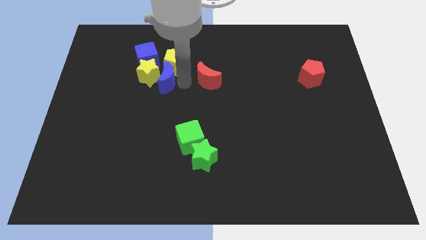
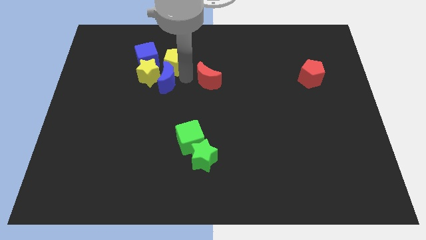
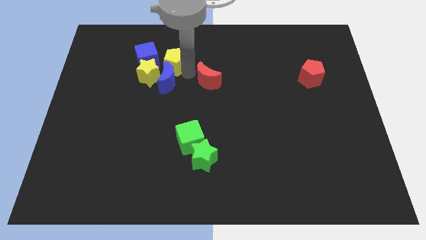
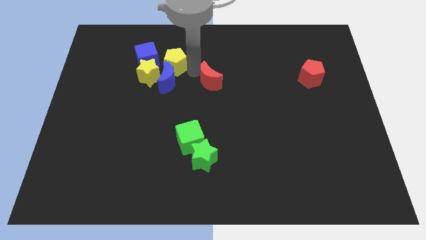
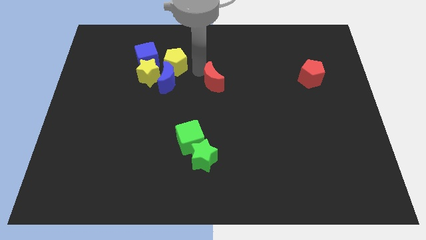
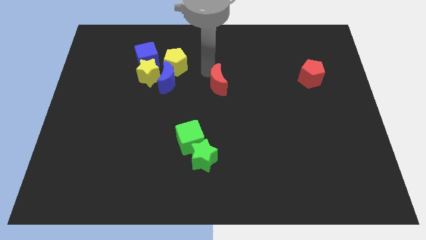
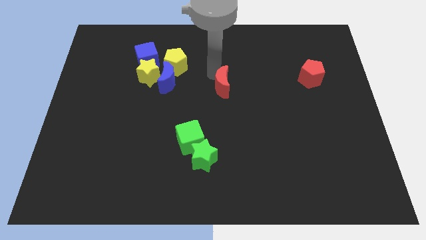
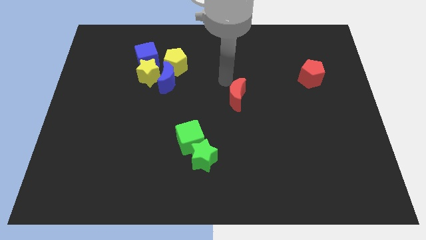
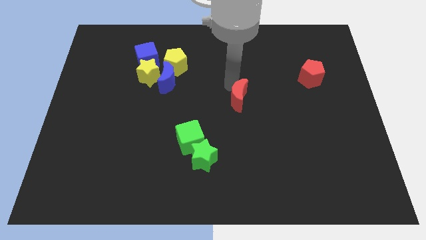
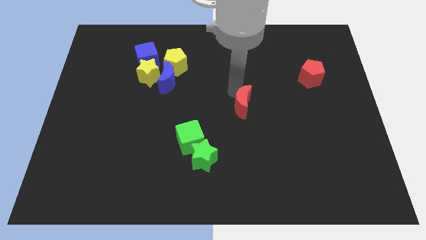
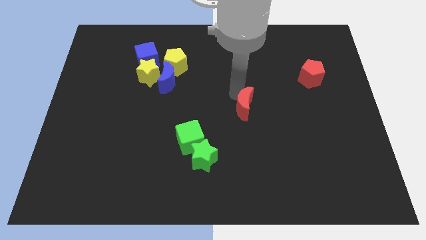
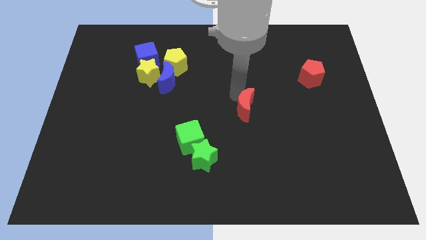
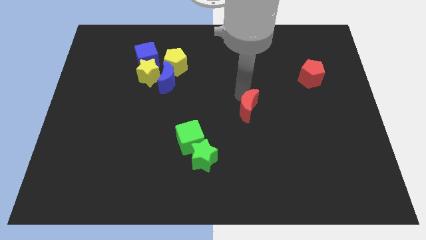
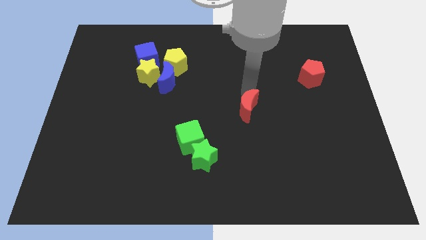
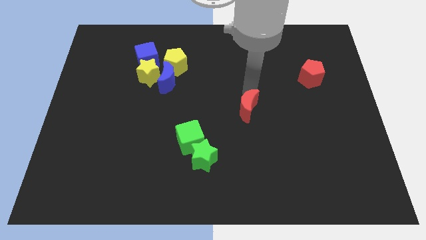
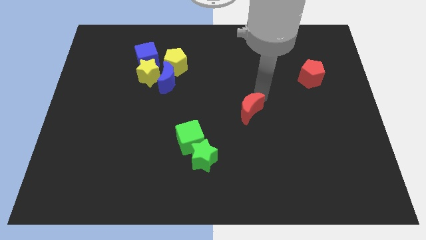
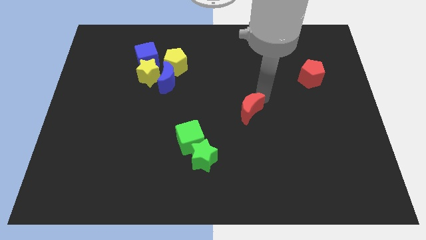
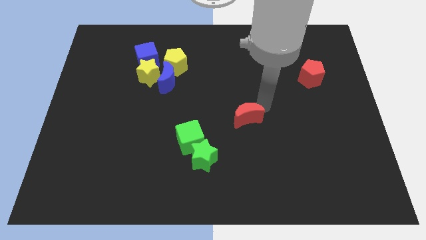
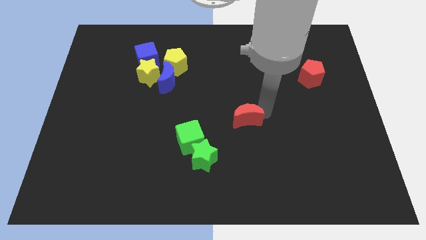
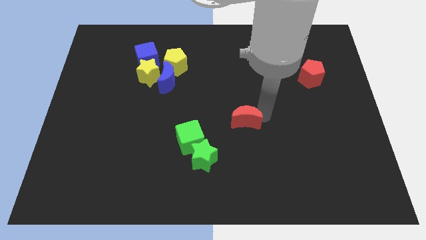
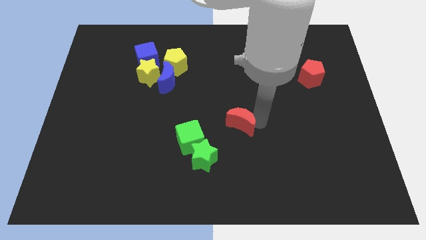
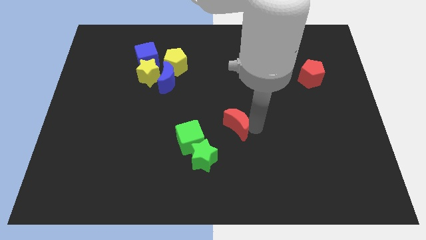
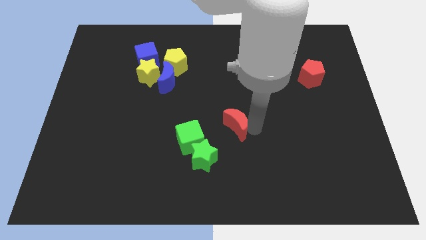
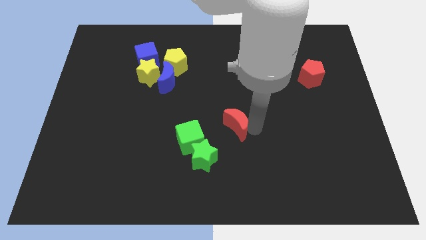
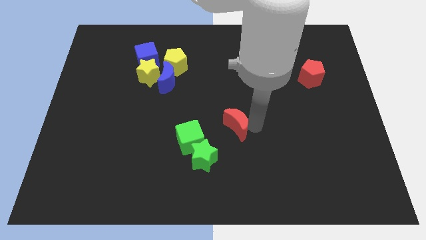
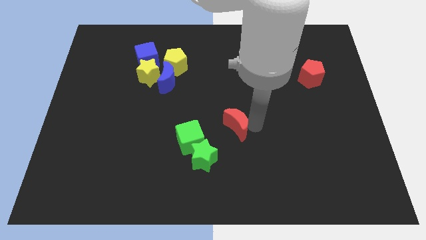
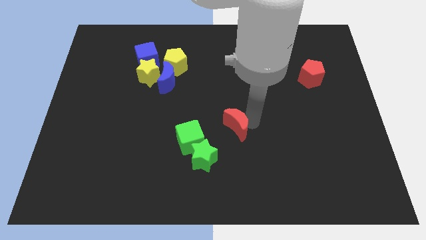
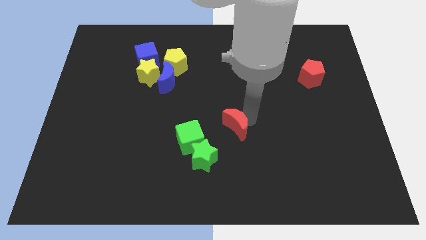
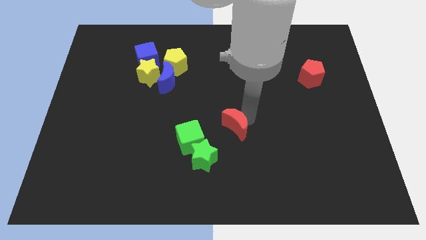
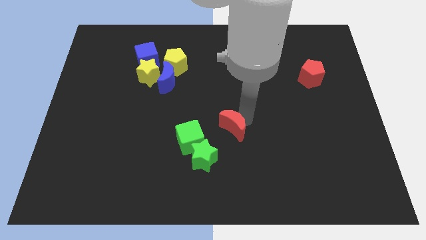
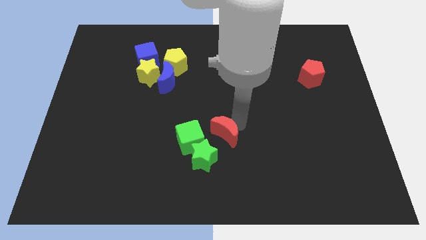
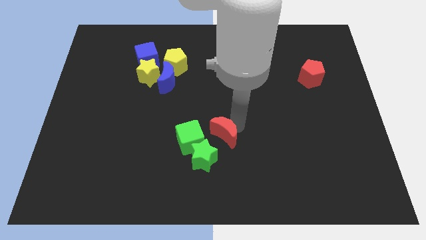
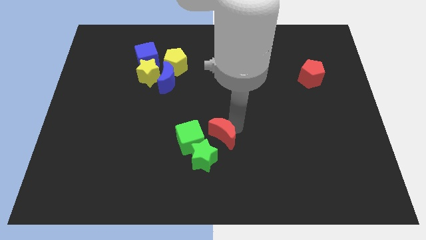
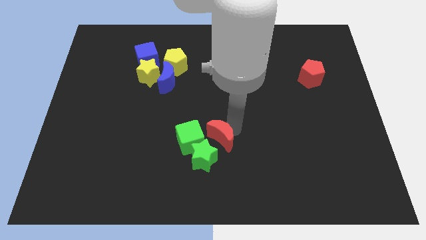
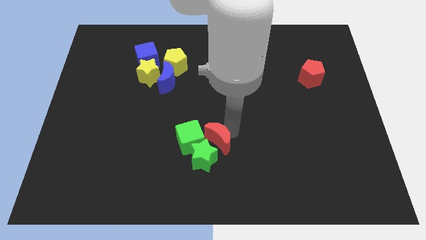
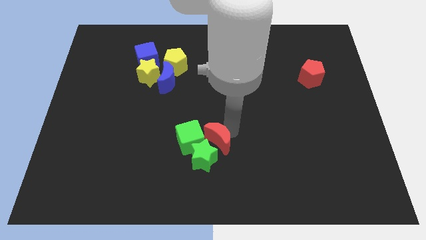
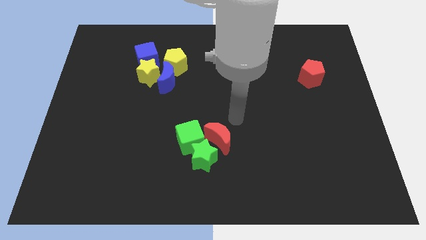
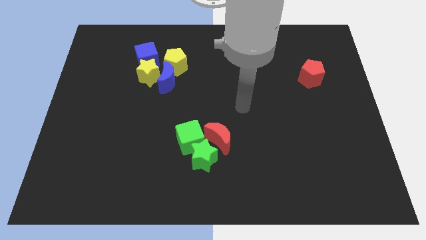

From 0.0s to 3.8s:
move the red crescent into the green cube

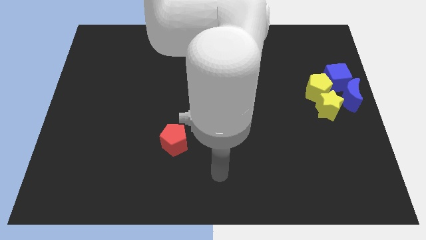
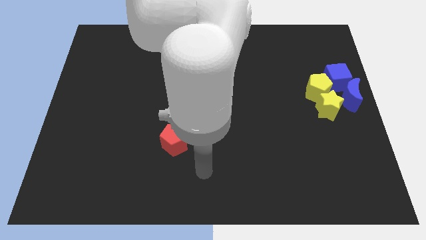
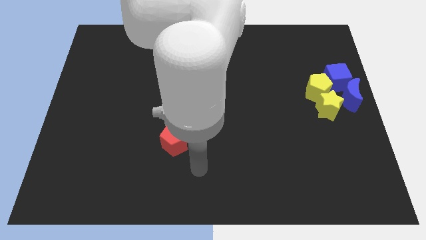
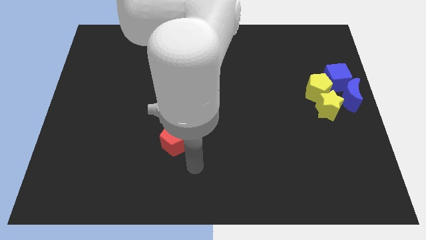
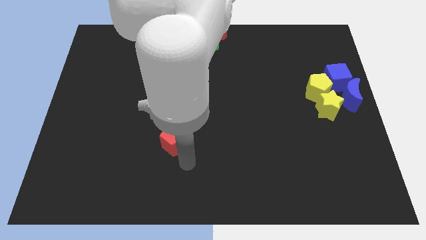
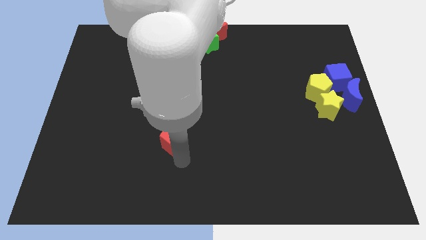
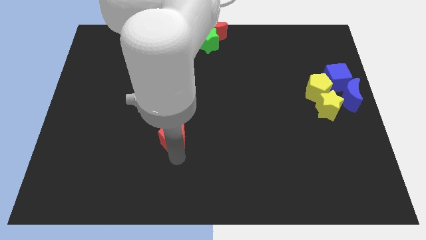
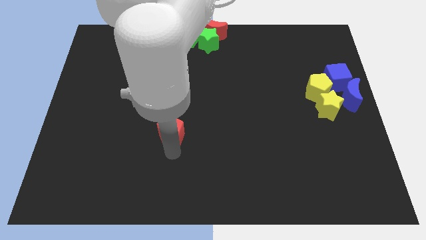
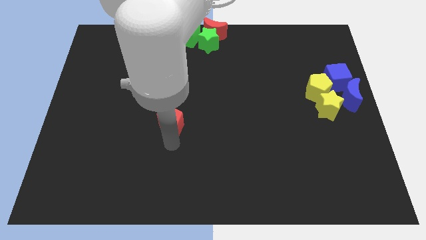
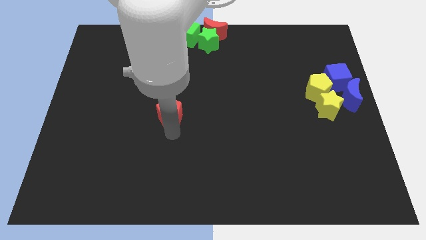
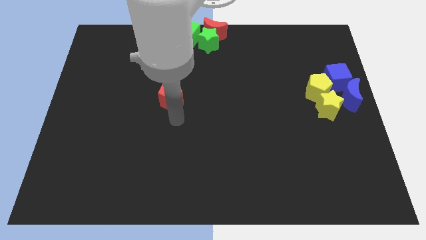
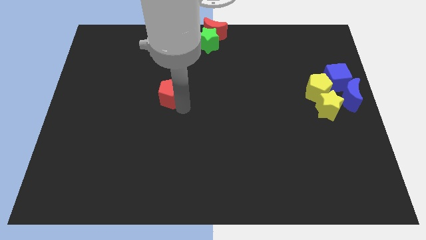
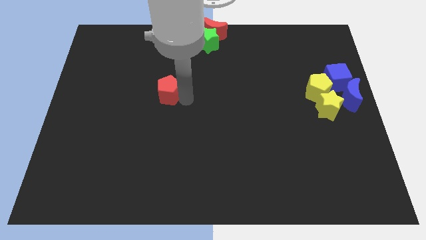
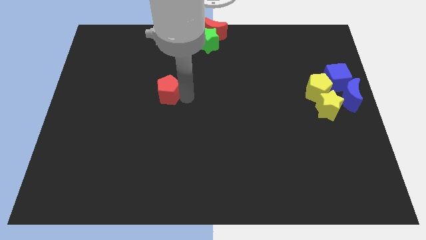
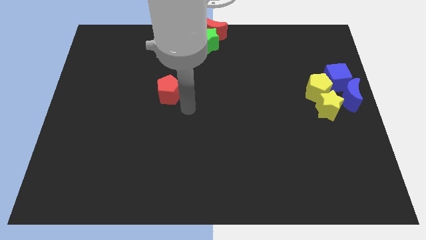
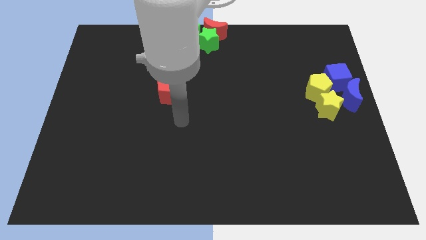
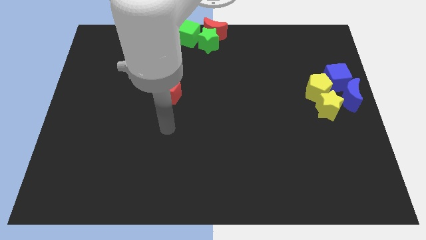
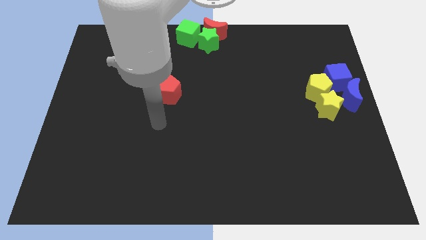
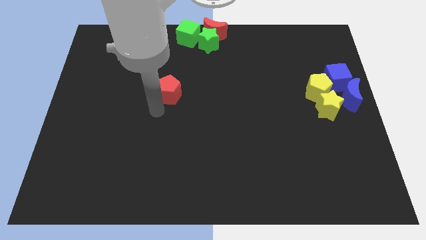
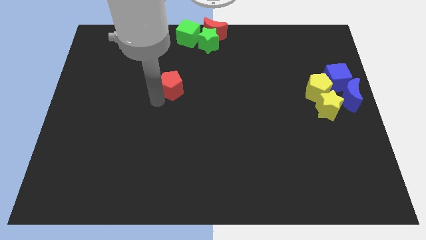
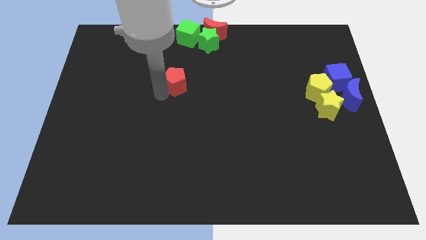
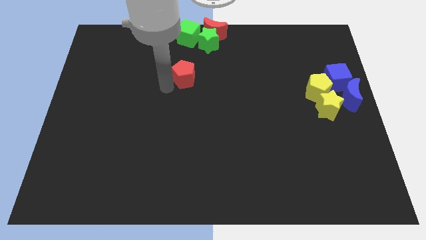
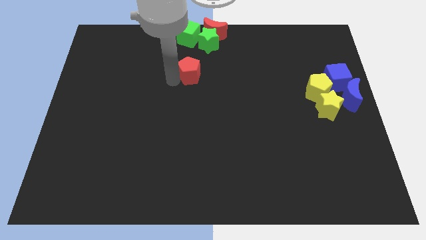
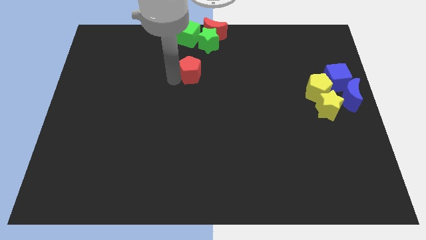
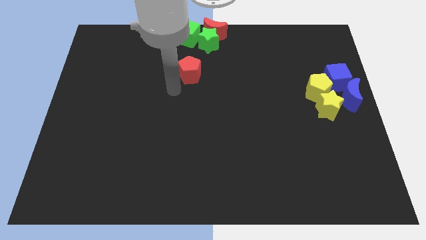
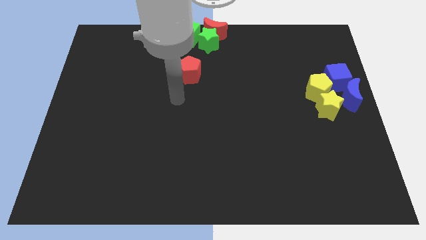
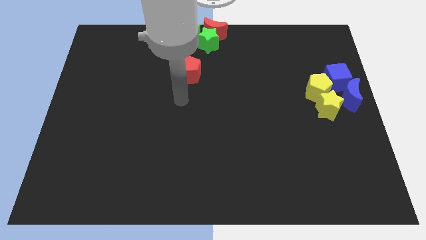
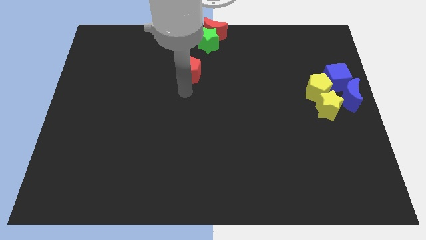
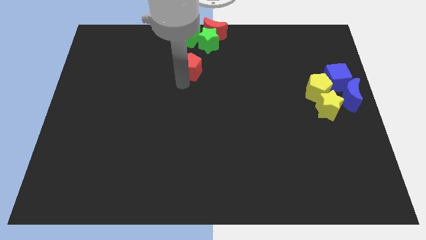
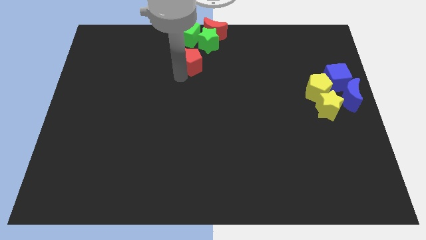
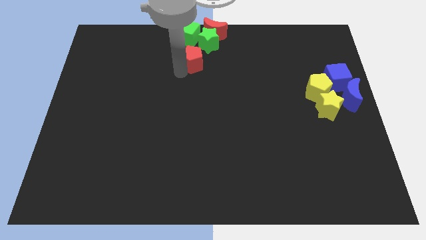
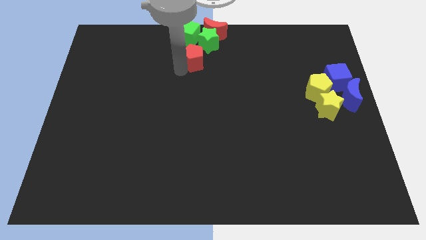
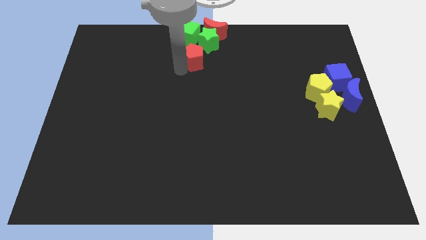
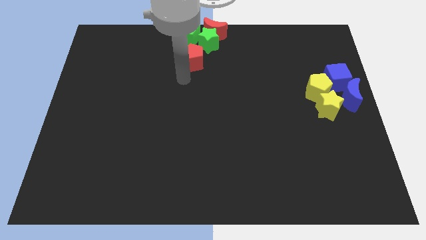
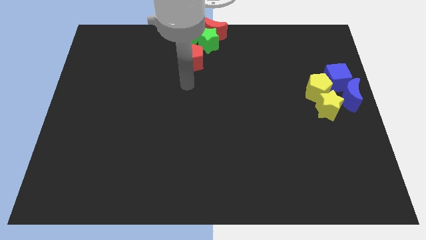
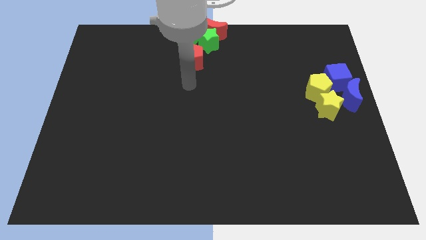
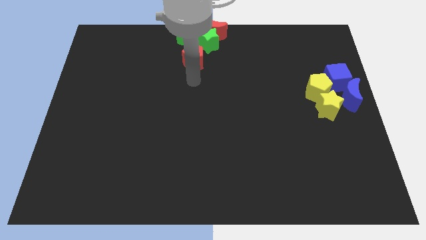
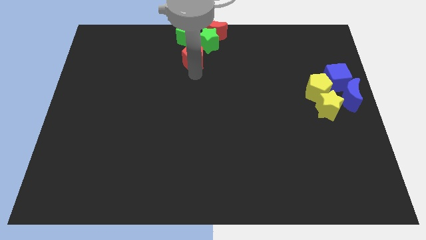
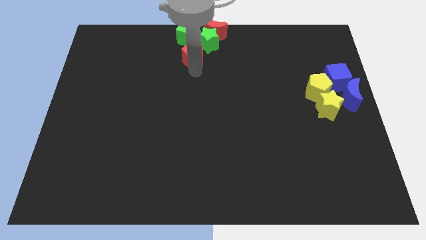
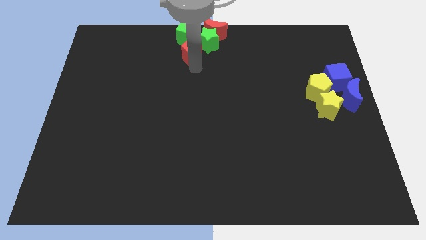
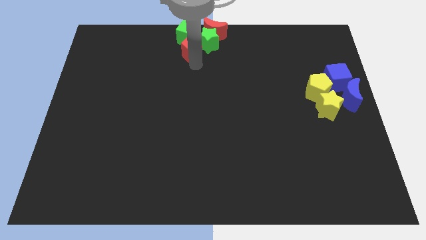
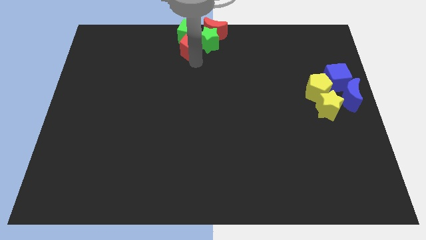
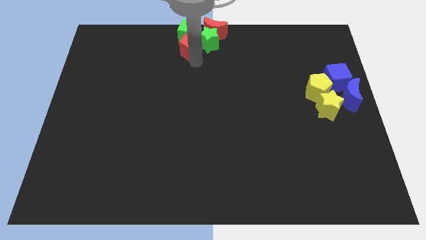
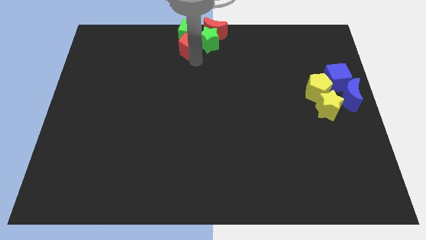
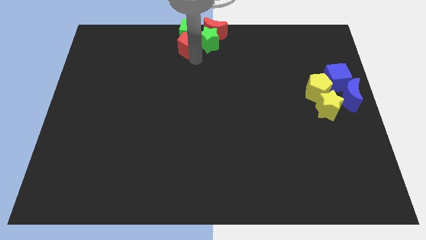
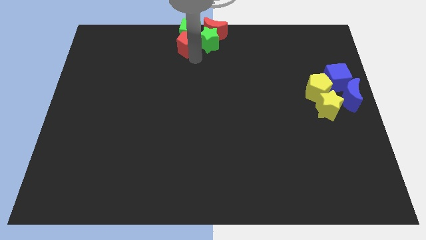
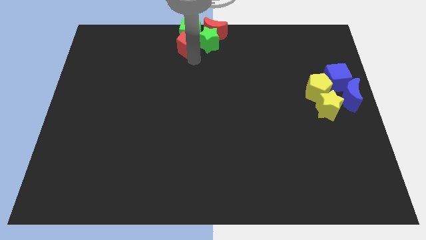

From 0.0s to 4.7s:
place red pentagon below green cube

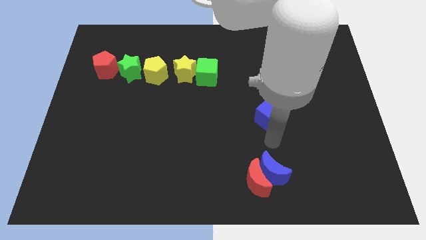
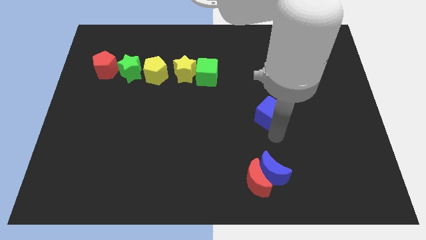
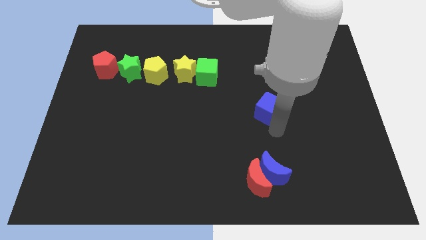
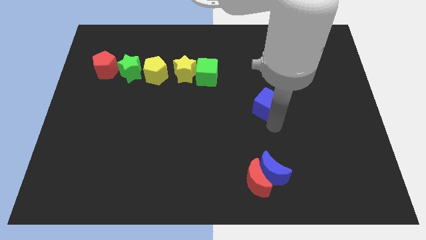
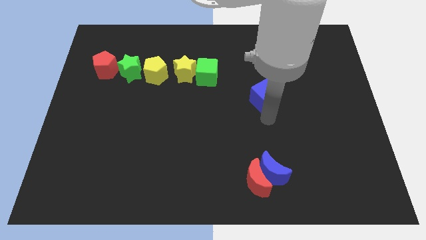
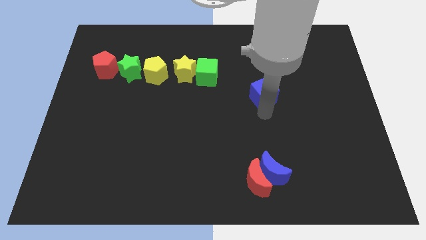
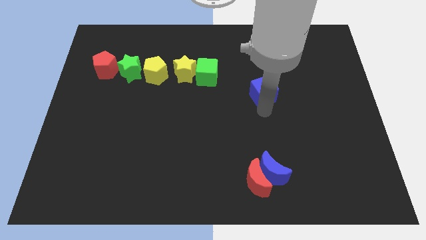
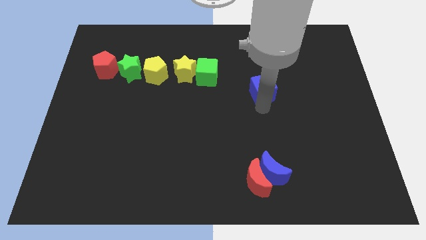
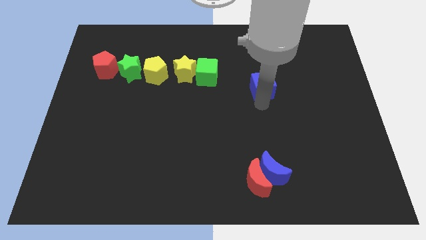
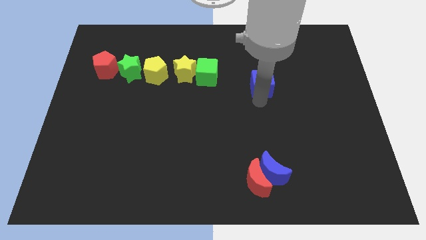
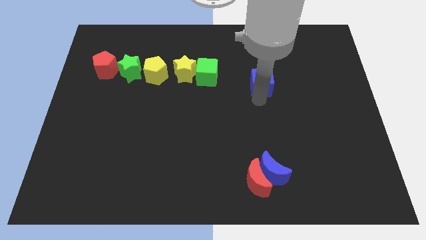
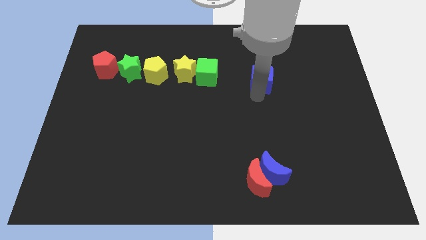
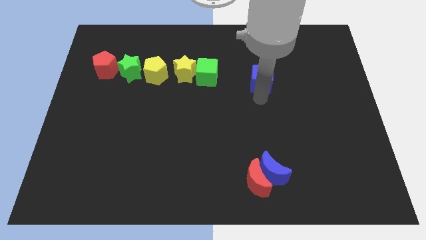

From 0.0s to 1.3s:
slide the blue cube slightly towards up
